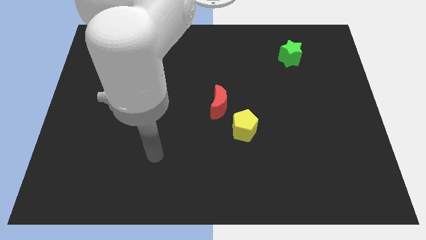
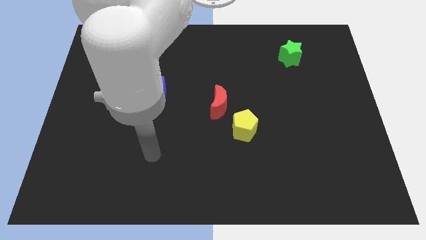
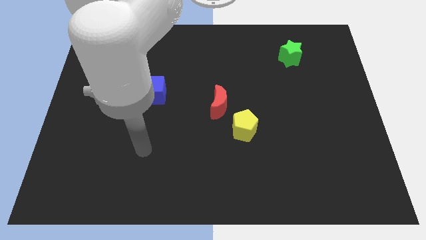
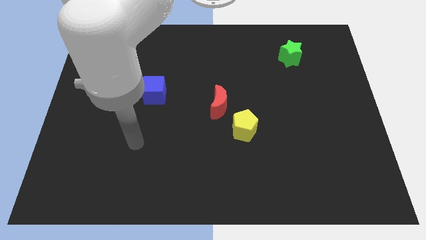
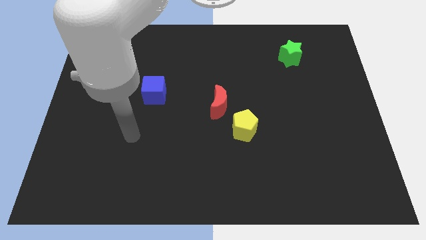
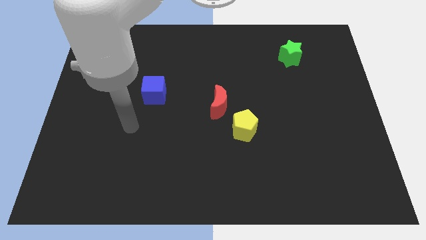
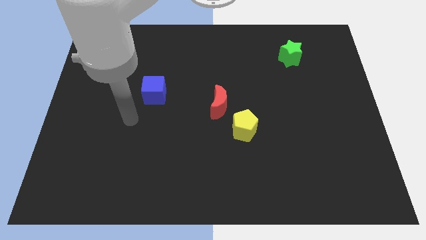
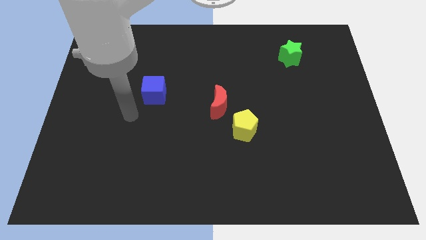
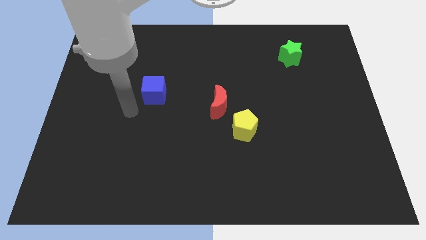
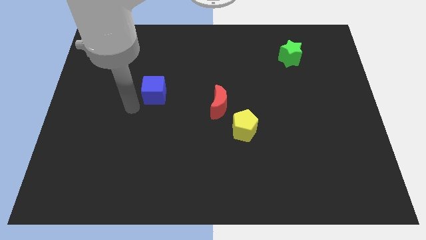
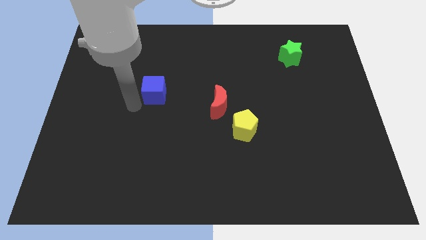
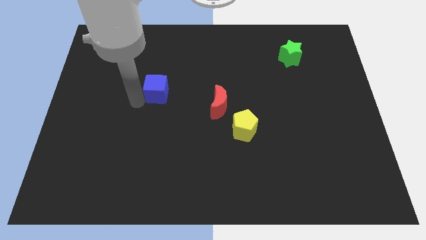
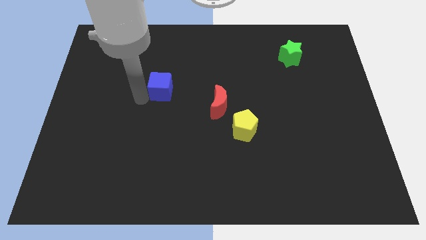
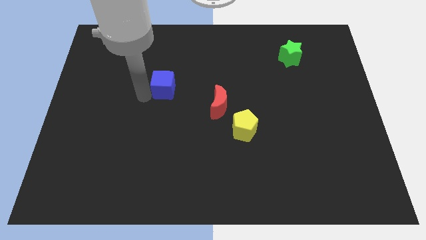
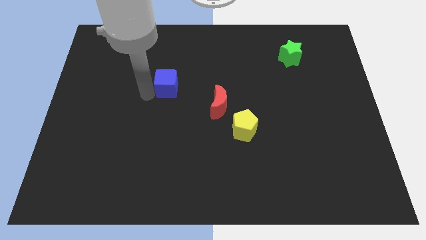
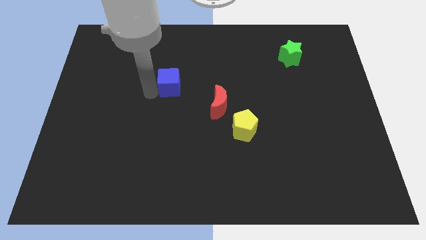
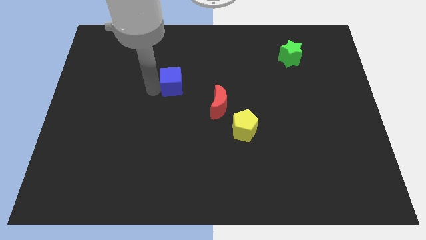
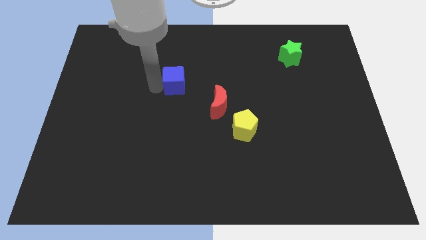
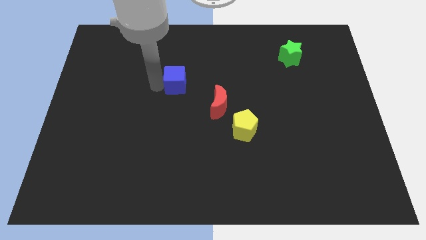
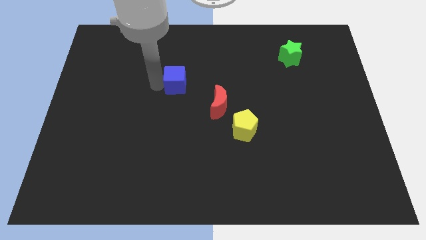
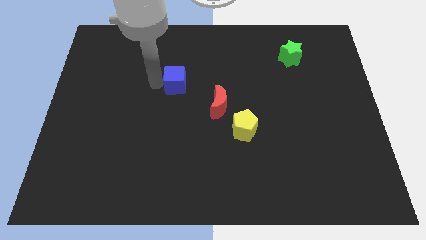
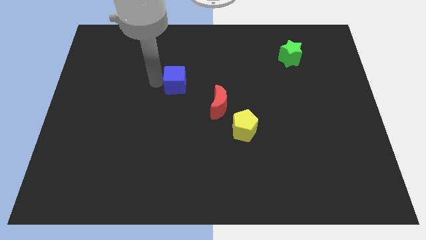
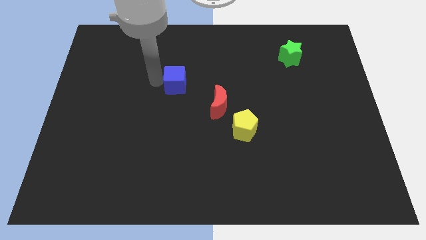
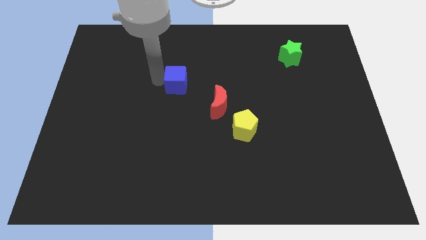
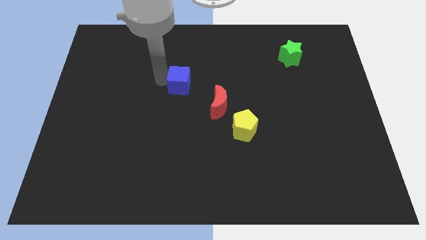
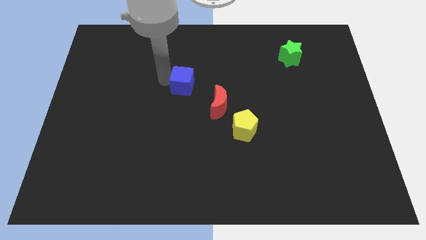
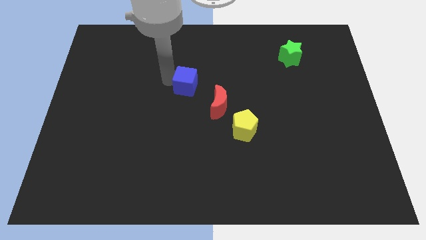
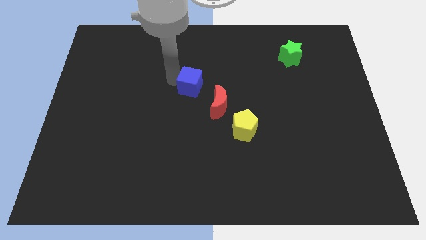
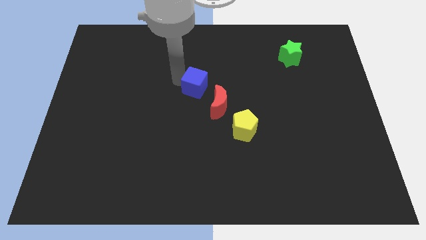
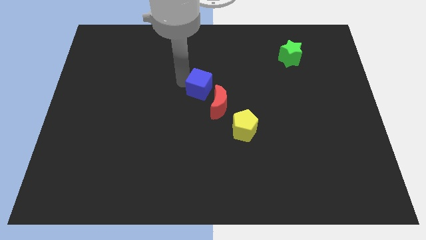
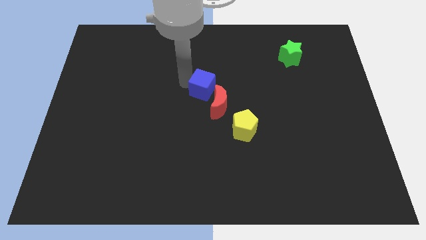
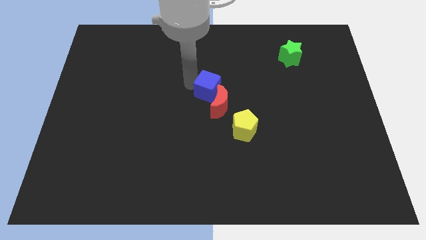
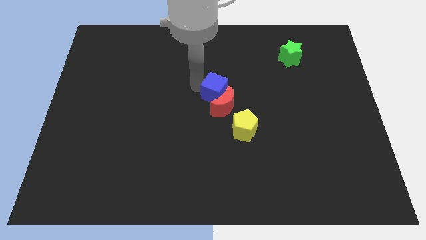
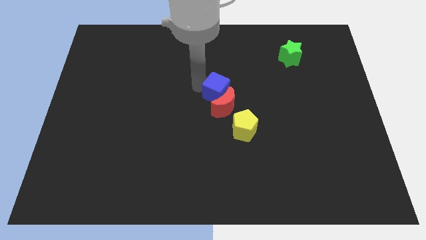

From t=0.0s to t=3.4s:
move the blue block close to the red moon

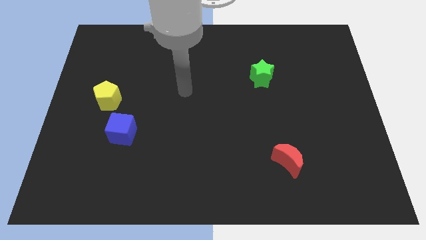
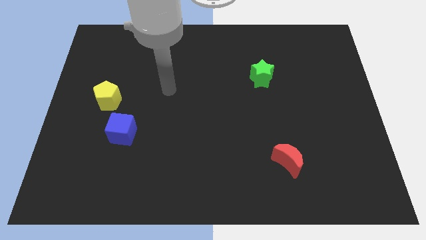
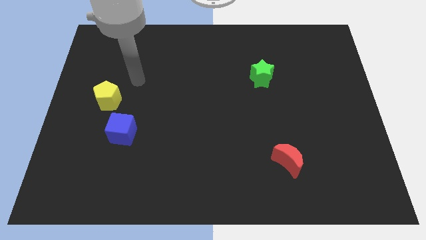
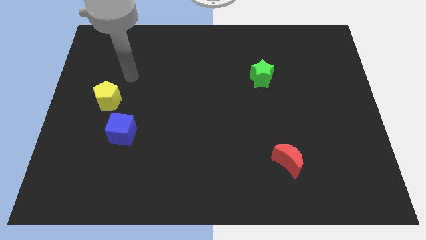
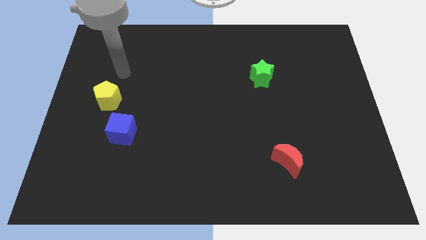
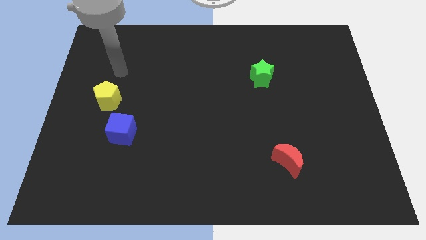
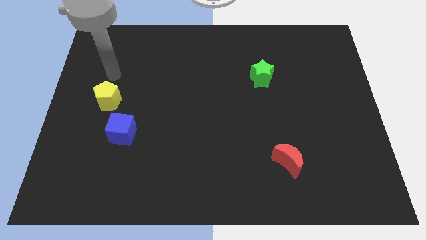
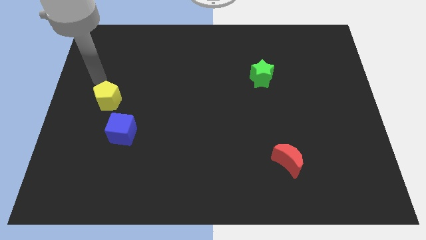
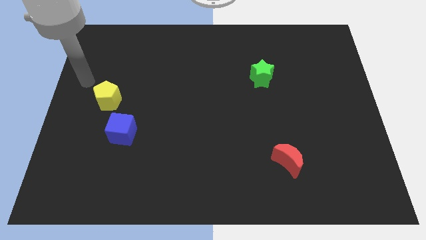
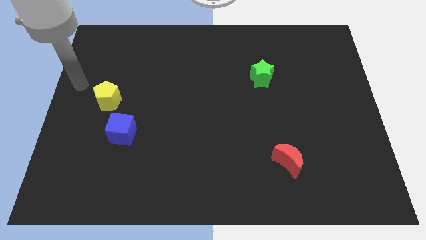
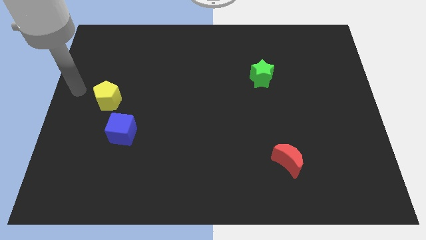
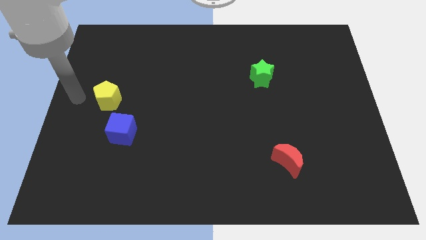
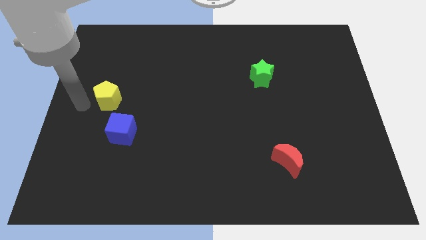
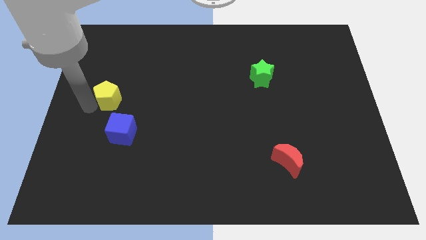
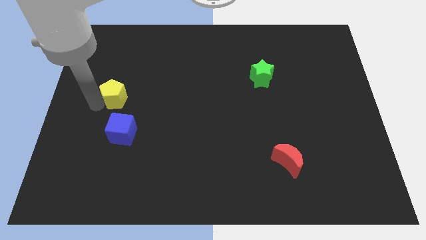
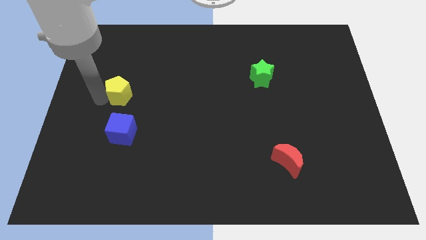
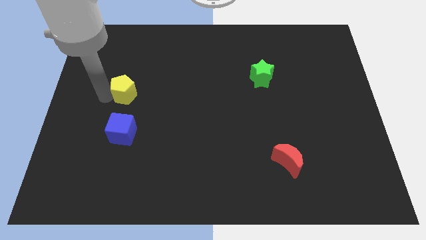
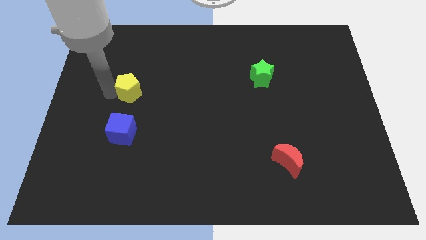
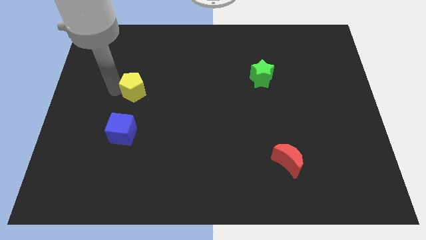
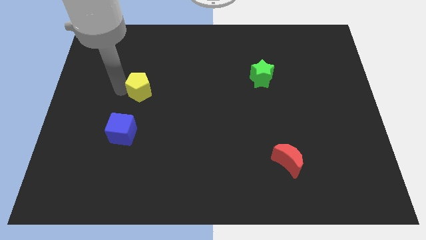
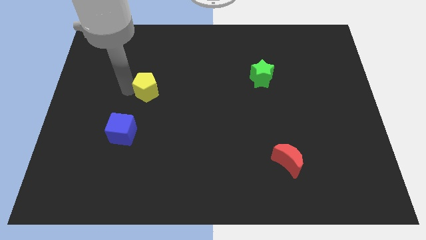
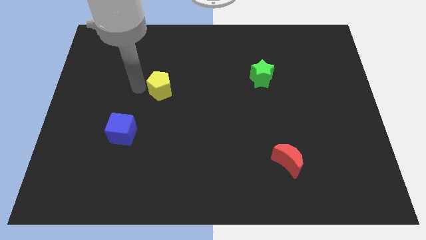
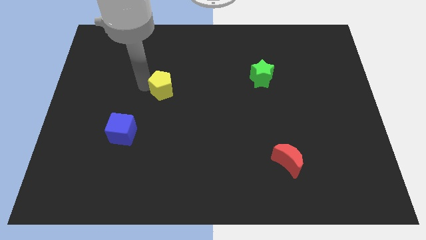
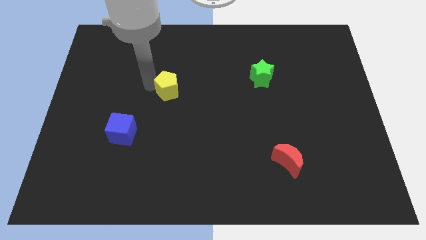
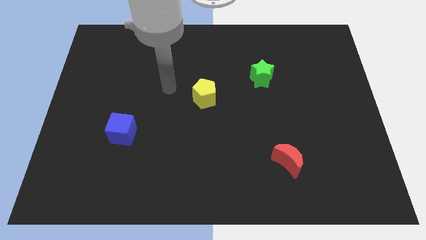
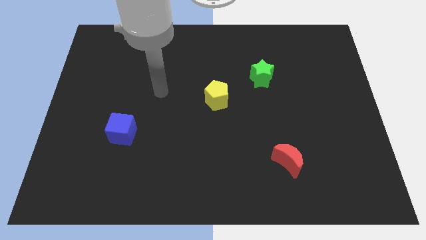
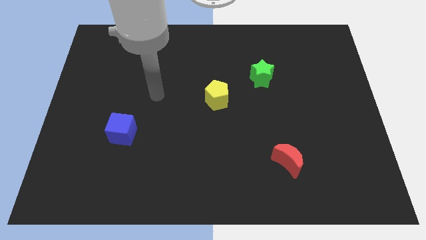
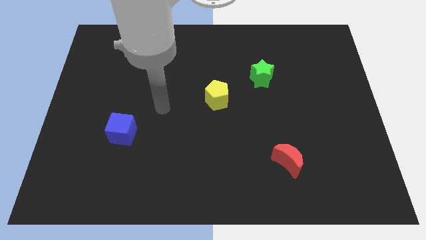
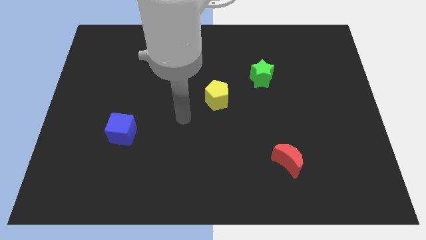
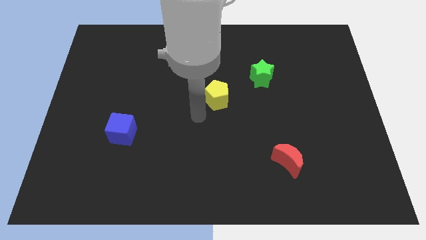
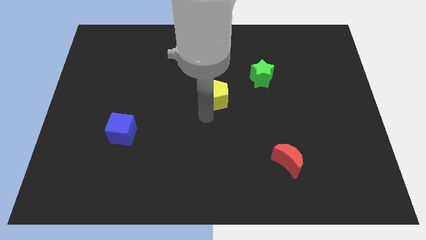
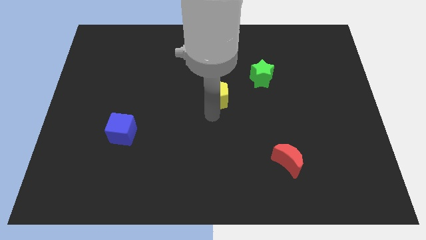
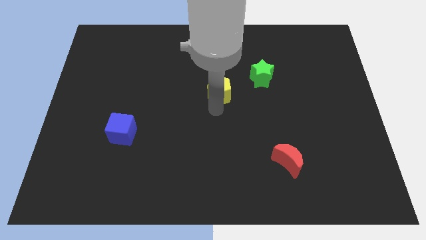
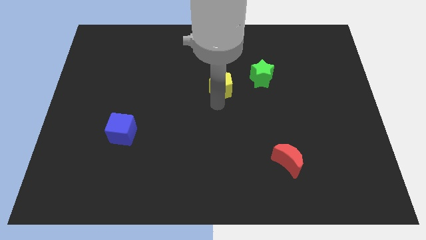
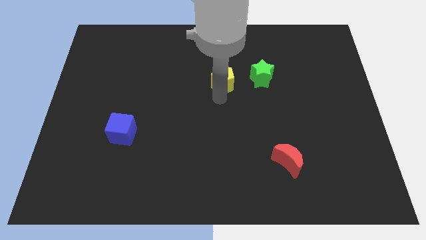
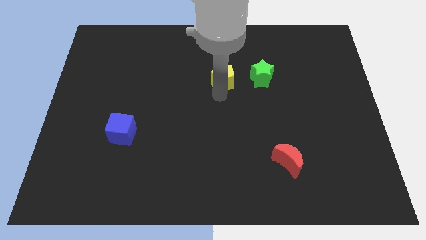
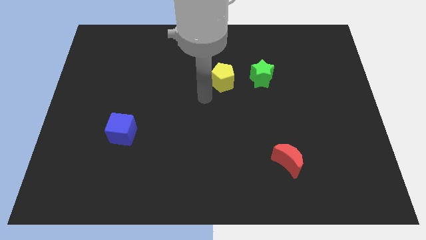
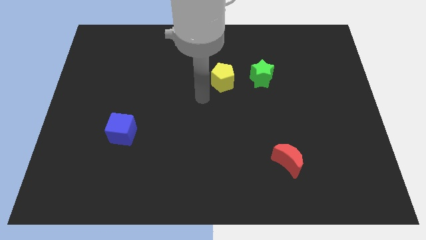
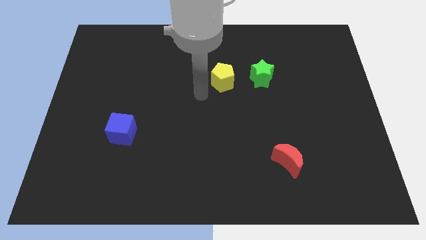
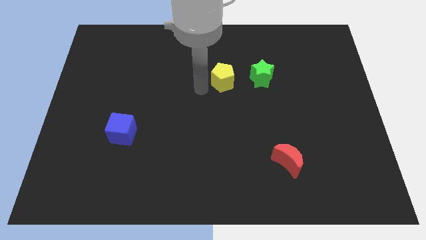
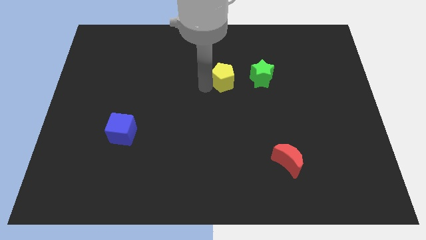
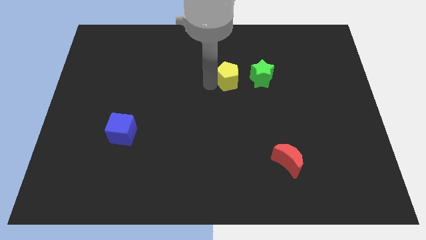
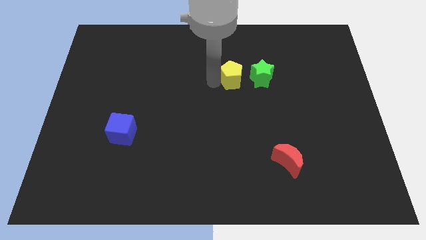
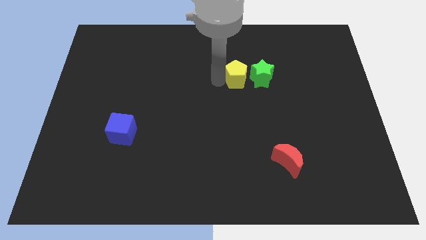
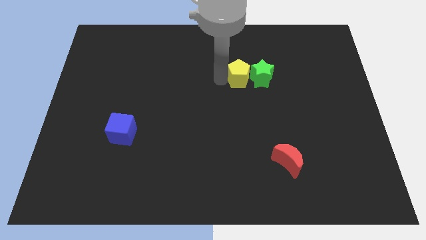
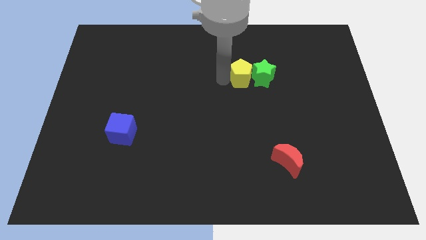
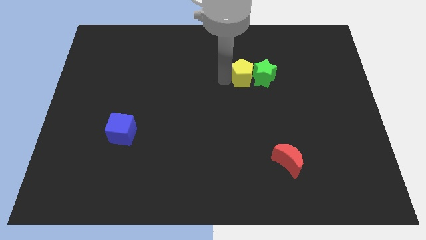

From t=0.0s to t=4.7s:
slide the yellow pentagon to the green block

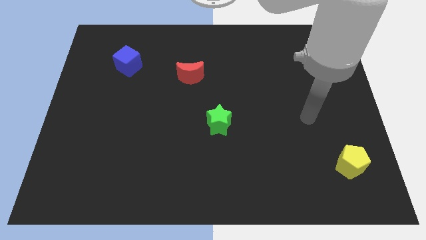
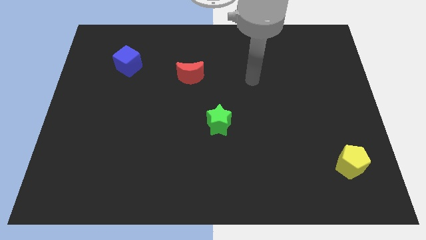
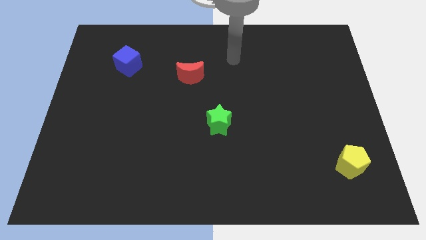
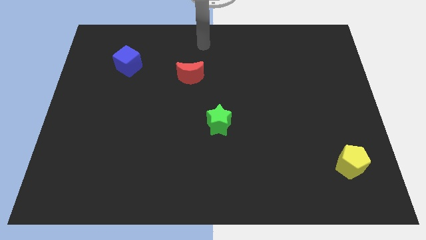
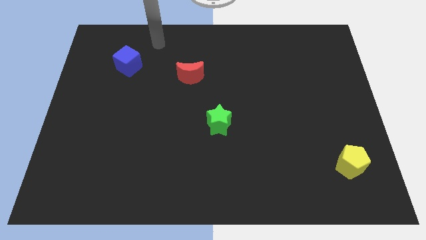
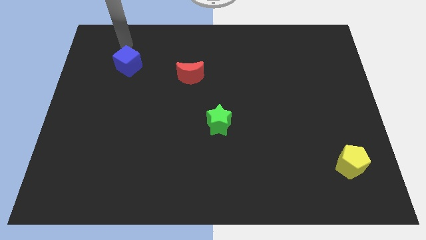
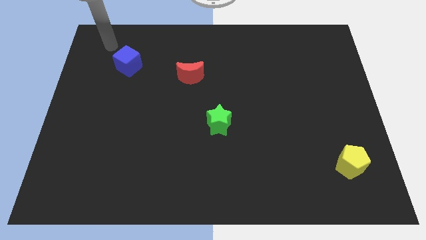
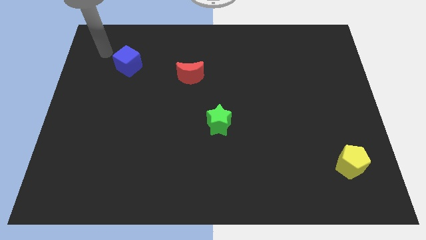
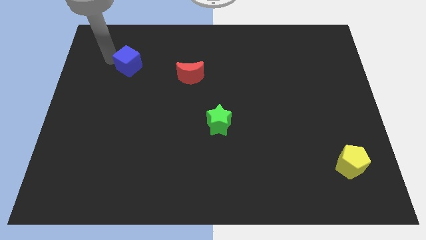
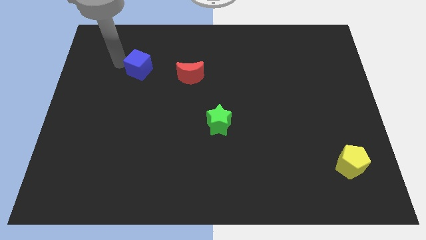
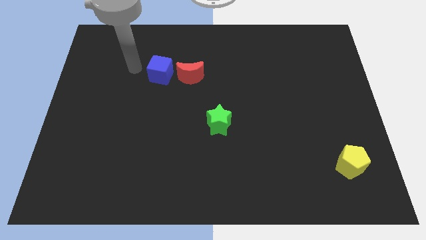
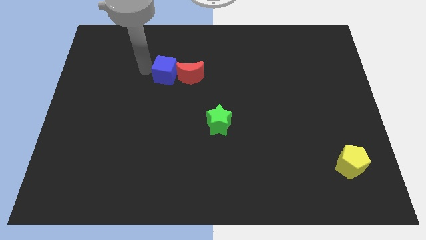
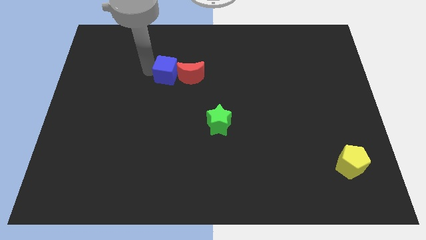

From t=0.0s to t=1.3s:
slide the cube close to the moon
